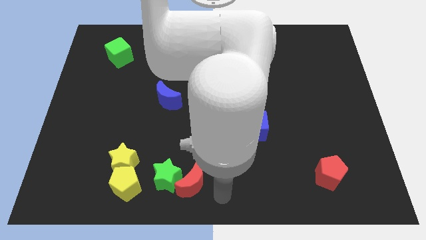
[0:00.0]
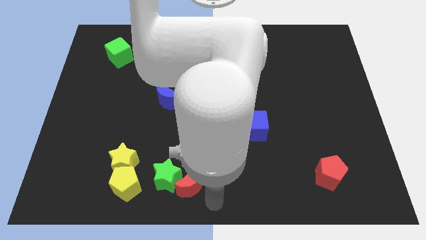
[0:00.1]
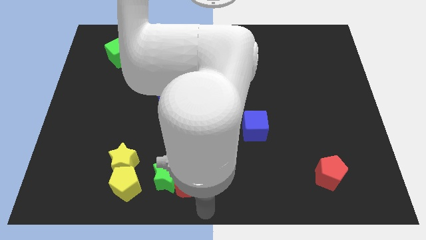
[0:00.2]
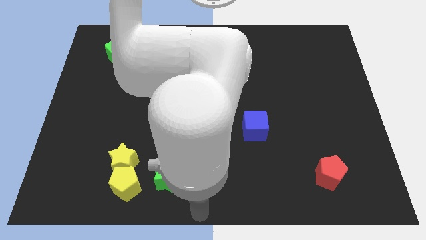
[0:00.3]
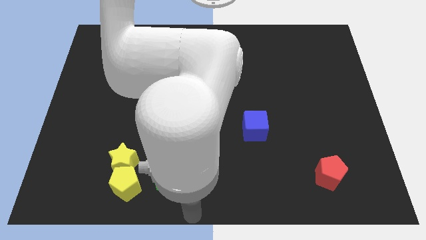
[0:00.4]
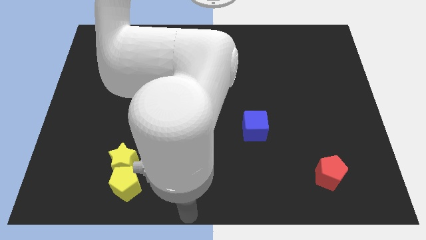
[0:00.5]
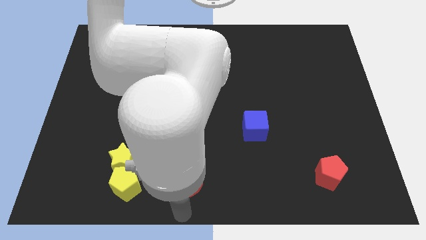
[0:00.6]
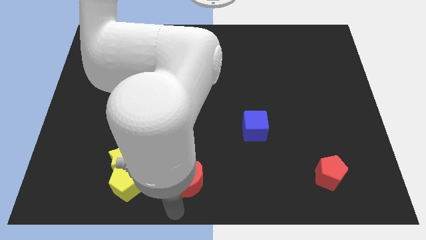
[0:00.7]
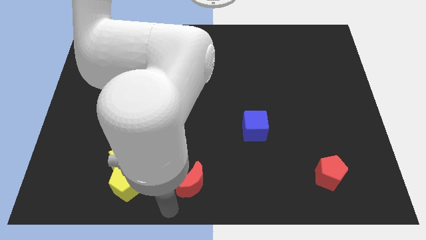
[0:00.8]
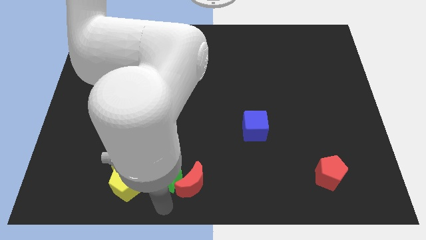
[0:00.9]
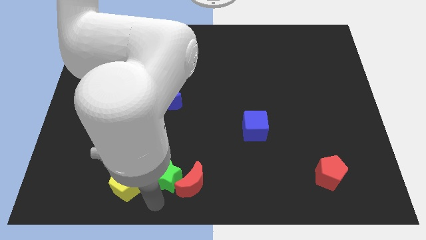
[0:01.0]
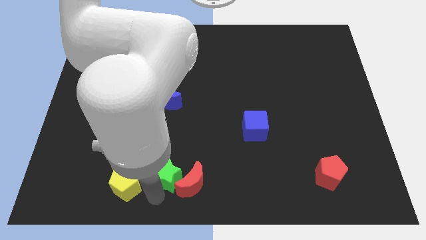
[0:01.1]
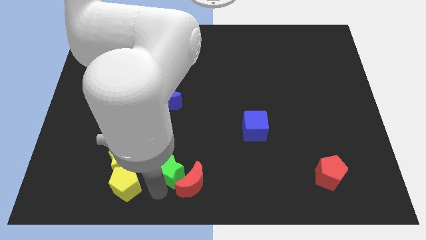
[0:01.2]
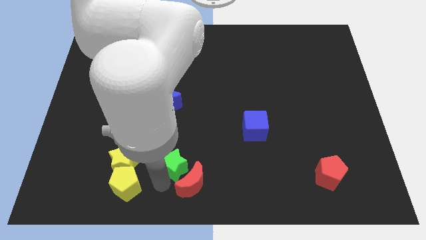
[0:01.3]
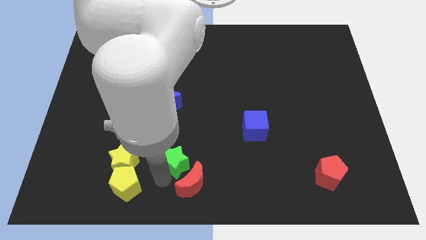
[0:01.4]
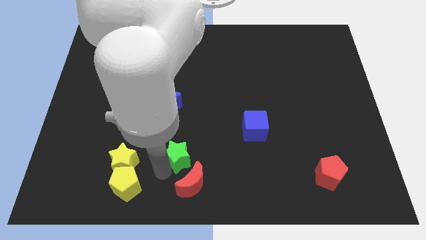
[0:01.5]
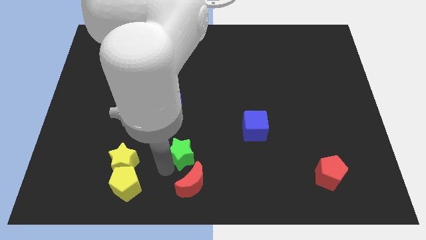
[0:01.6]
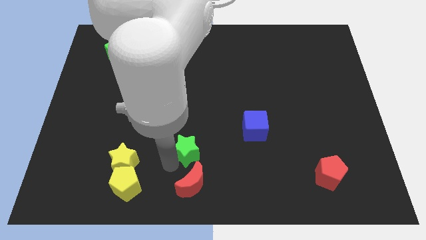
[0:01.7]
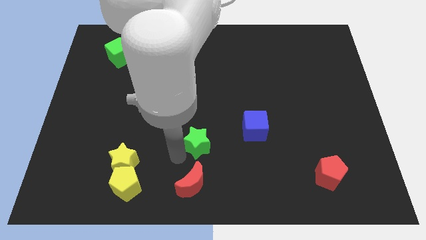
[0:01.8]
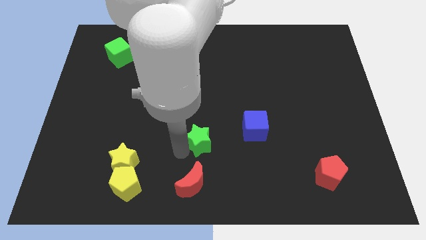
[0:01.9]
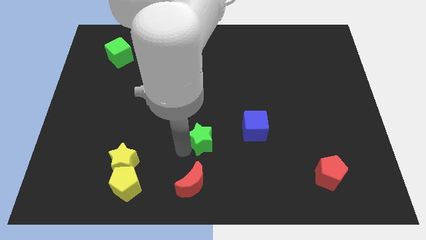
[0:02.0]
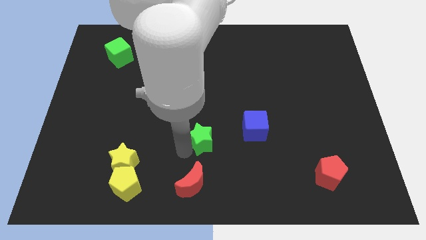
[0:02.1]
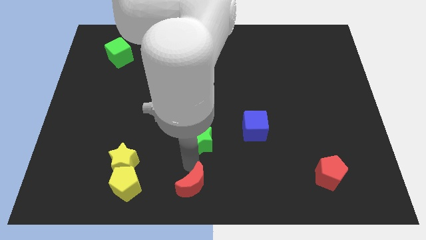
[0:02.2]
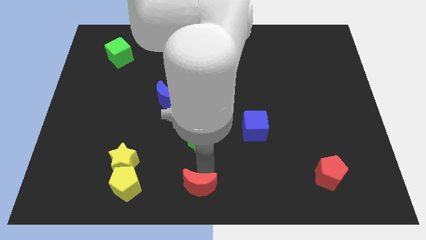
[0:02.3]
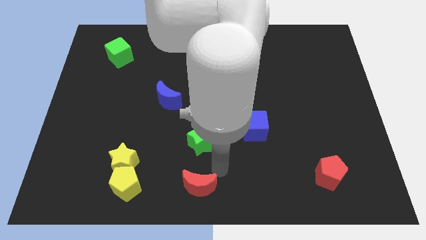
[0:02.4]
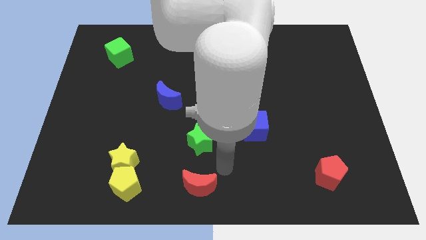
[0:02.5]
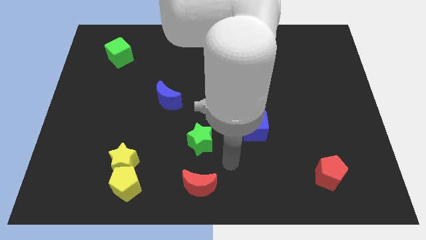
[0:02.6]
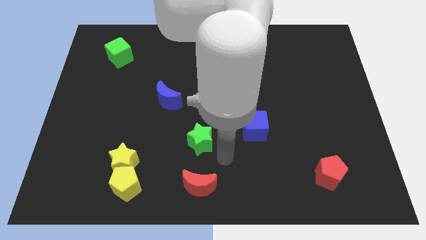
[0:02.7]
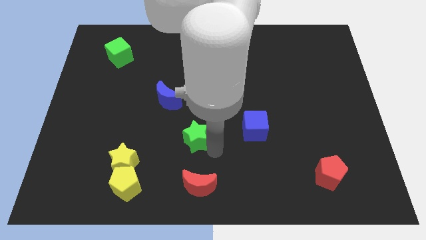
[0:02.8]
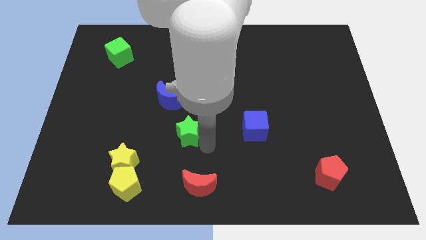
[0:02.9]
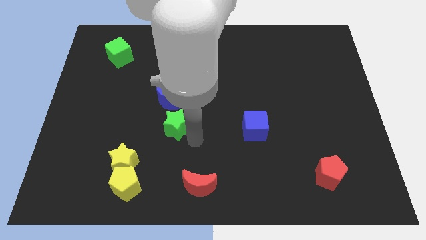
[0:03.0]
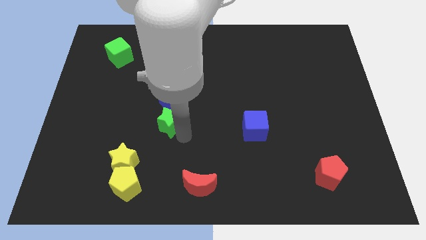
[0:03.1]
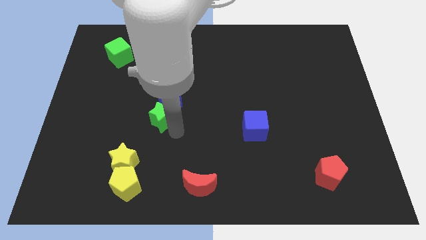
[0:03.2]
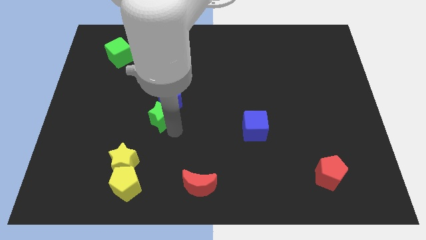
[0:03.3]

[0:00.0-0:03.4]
place the green star diagonal to the yellow star

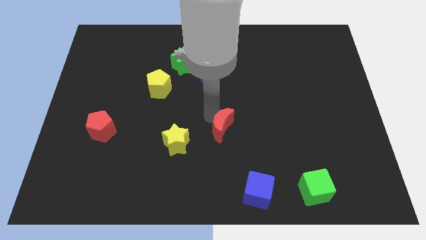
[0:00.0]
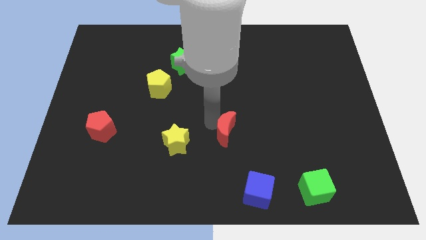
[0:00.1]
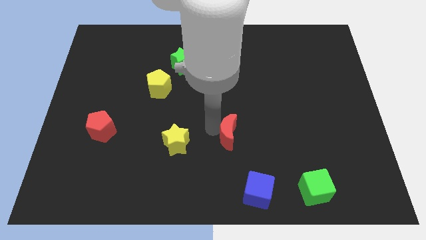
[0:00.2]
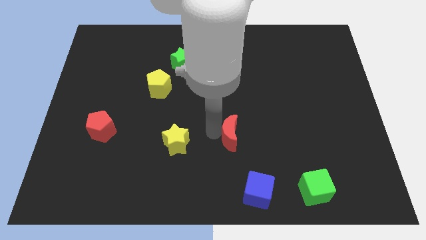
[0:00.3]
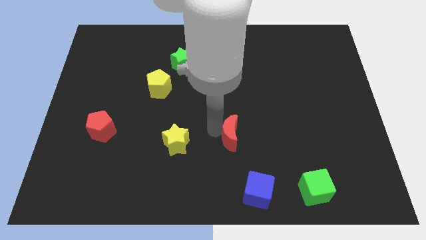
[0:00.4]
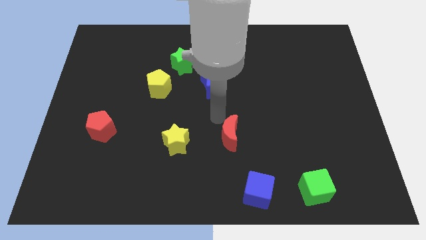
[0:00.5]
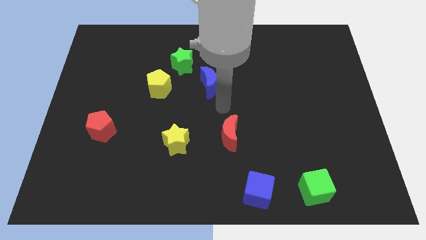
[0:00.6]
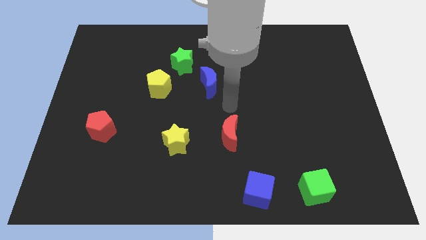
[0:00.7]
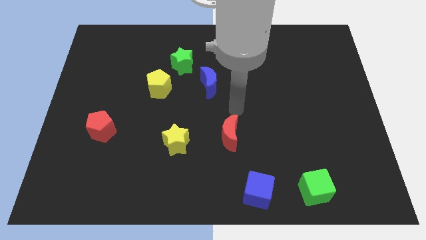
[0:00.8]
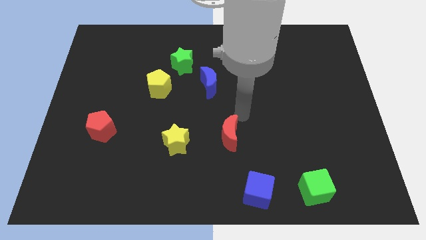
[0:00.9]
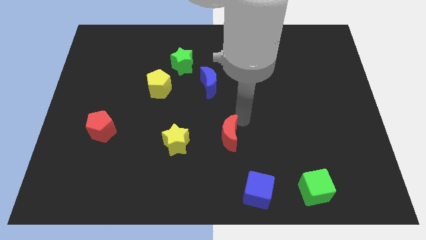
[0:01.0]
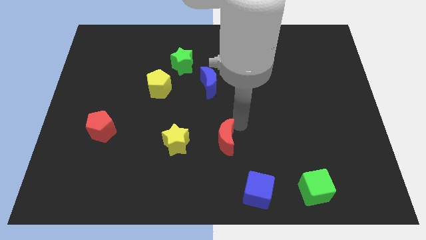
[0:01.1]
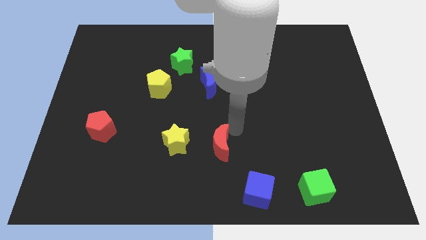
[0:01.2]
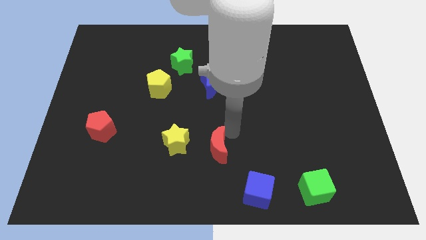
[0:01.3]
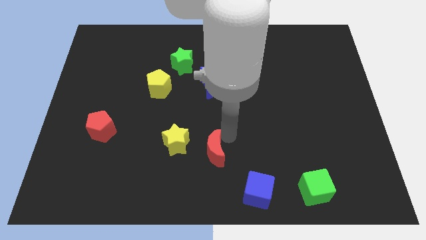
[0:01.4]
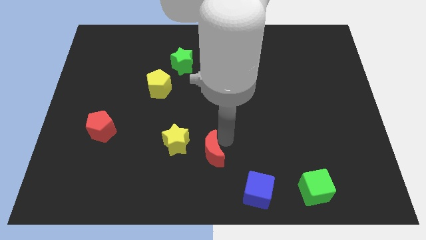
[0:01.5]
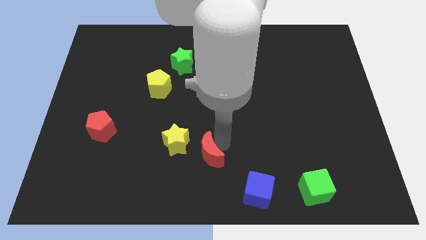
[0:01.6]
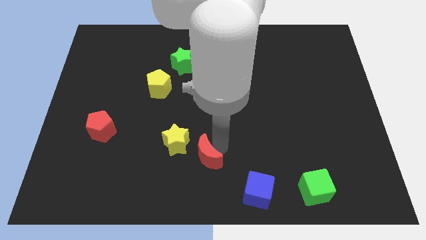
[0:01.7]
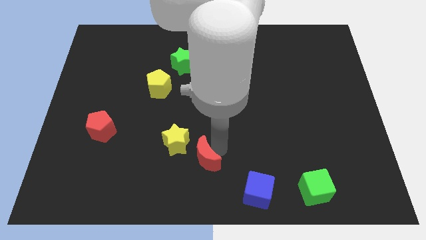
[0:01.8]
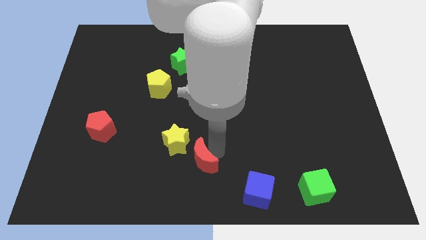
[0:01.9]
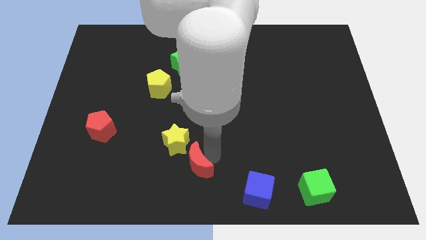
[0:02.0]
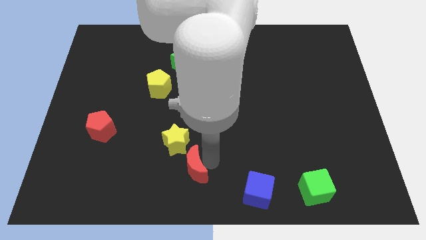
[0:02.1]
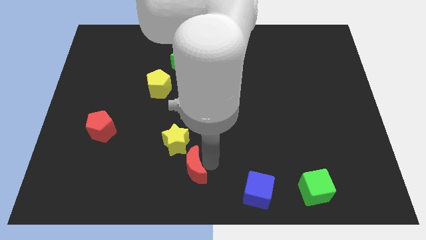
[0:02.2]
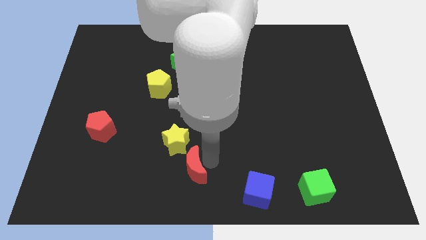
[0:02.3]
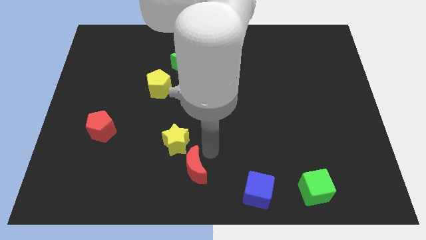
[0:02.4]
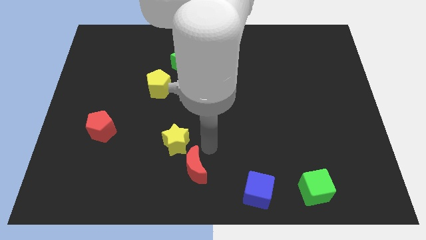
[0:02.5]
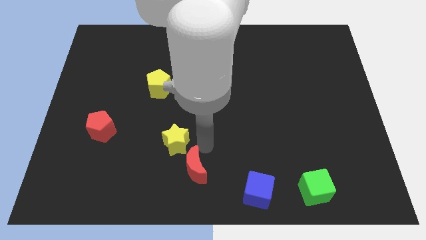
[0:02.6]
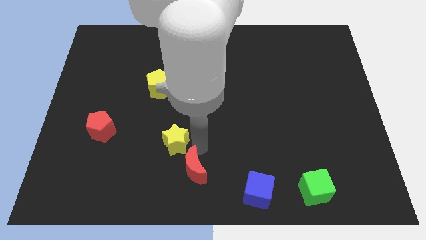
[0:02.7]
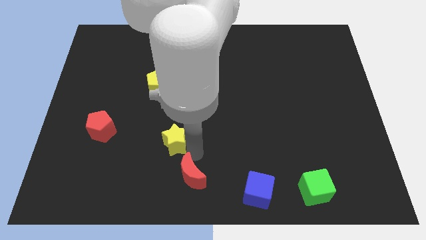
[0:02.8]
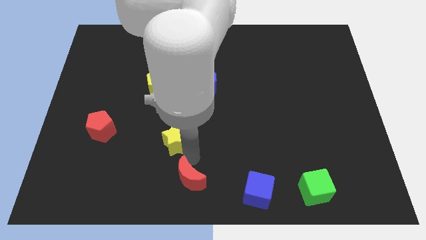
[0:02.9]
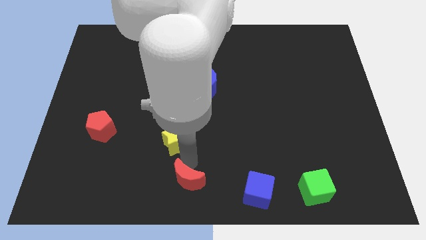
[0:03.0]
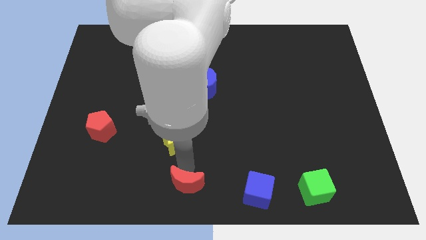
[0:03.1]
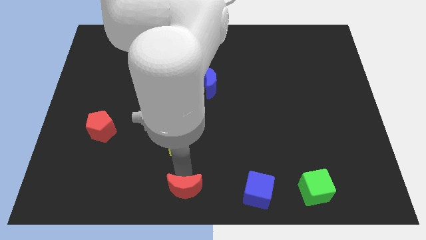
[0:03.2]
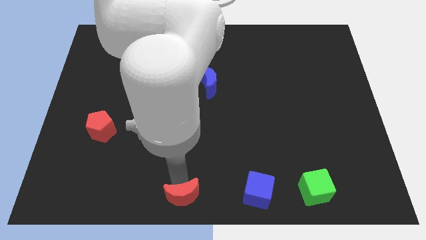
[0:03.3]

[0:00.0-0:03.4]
move the red crescent to the bottom of the yellow star

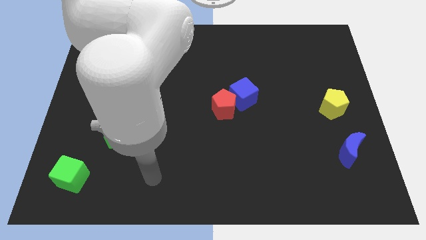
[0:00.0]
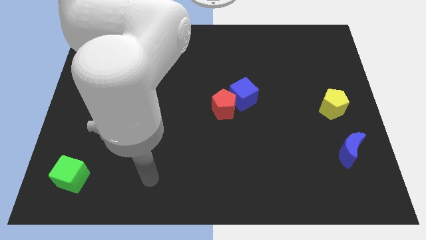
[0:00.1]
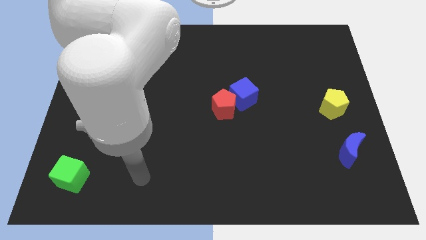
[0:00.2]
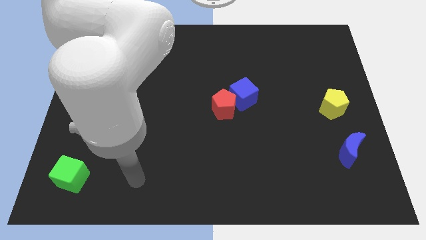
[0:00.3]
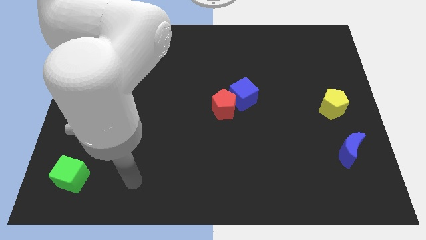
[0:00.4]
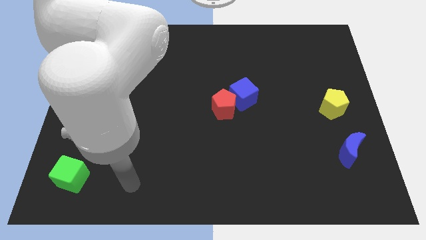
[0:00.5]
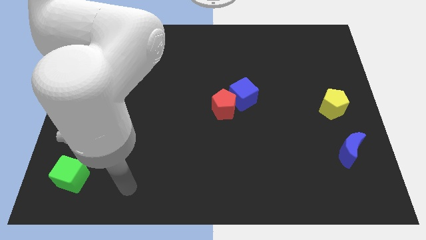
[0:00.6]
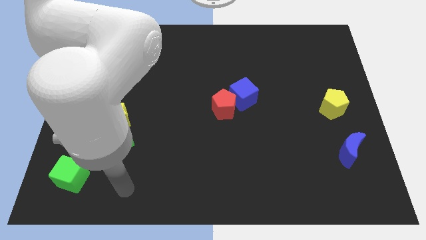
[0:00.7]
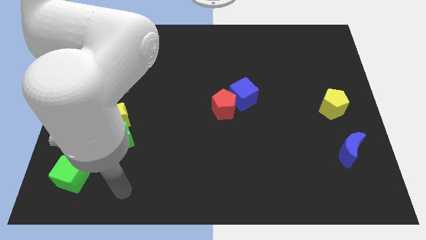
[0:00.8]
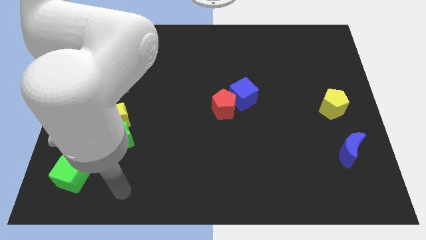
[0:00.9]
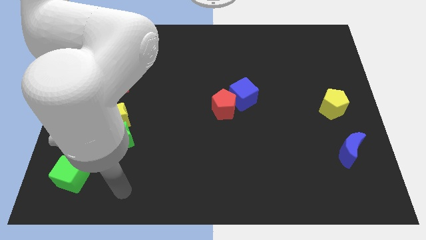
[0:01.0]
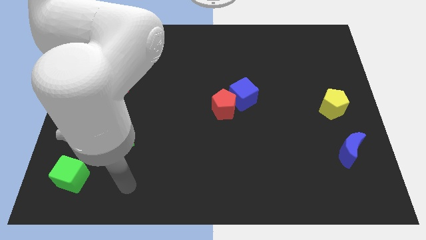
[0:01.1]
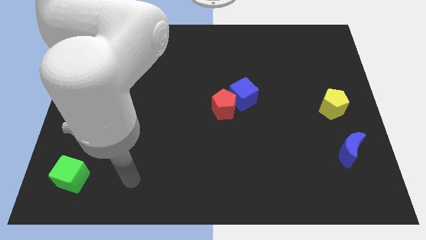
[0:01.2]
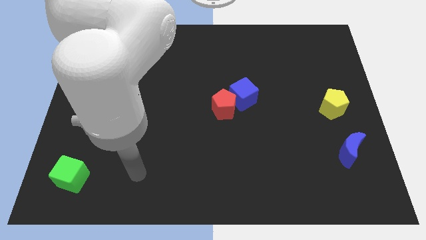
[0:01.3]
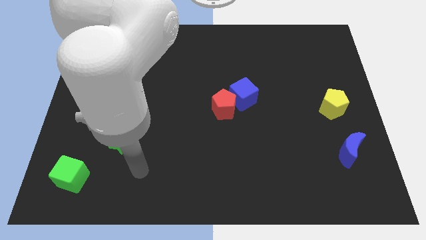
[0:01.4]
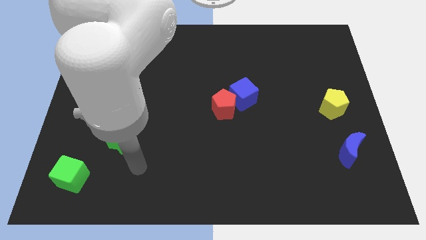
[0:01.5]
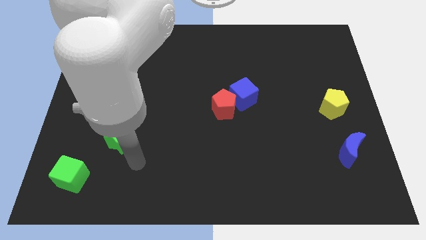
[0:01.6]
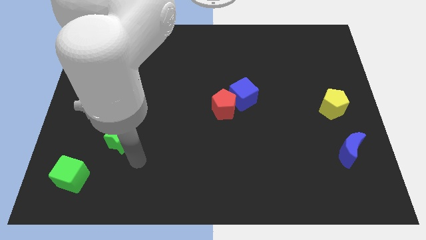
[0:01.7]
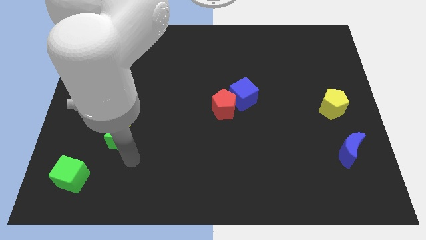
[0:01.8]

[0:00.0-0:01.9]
point your arm towards green star

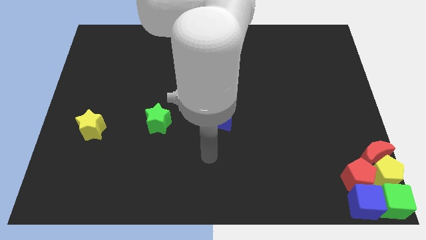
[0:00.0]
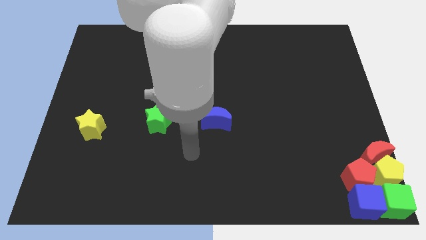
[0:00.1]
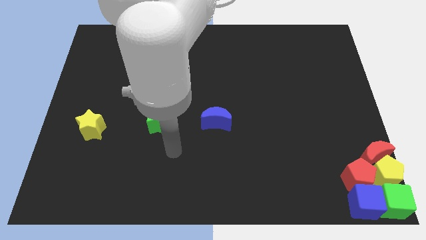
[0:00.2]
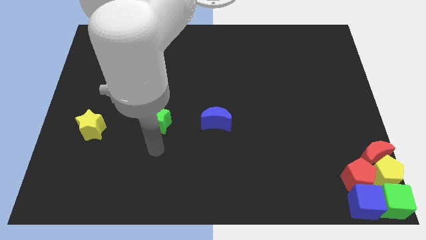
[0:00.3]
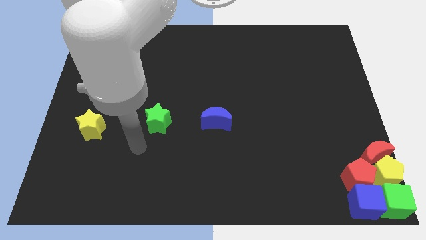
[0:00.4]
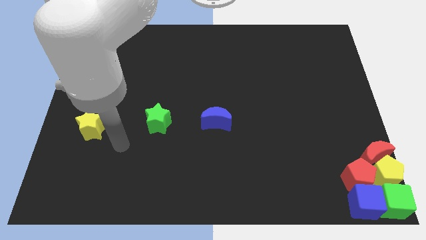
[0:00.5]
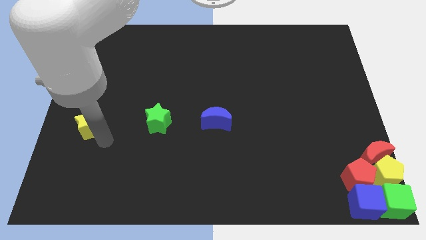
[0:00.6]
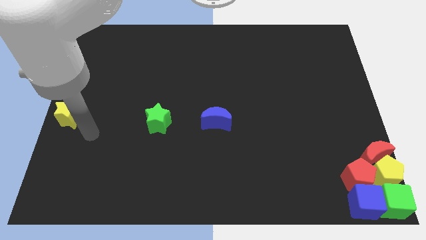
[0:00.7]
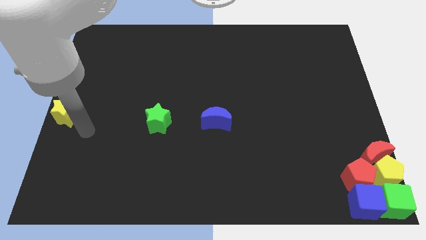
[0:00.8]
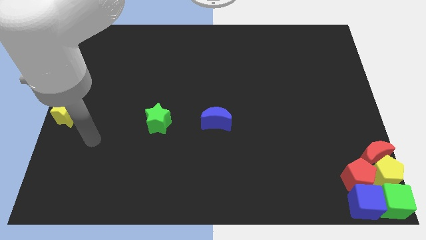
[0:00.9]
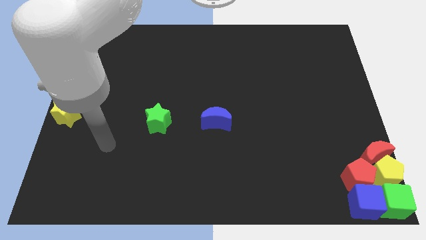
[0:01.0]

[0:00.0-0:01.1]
go and push the yellow star to the center left
